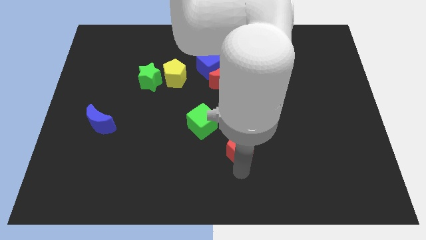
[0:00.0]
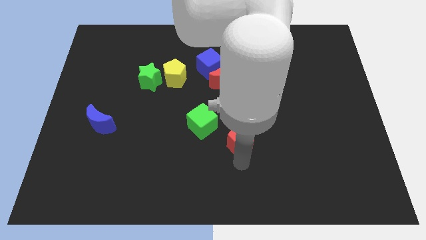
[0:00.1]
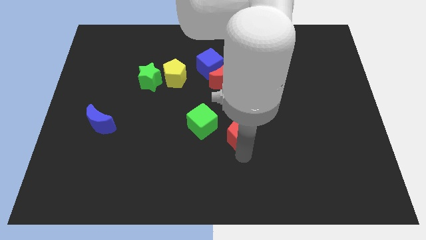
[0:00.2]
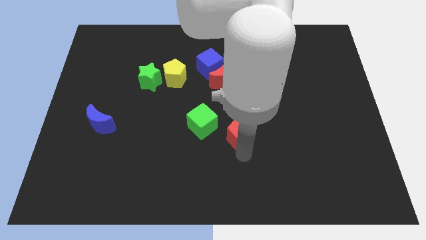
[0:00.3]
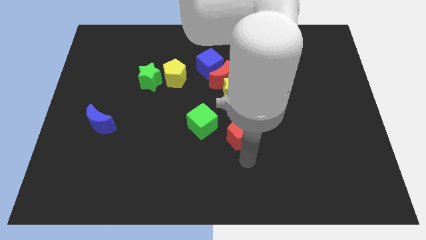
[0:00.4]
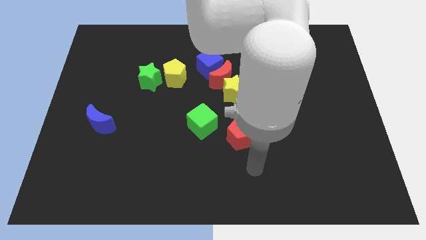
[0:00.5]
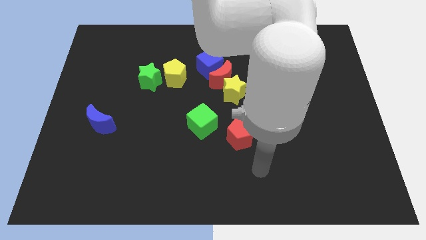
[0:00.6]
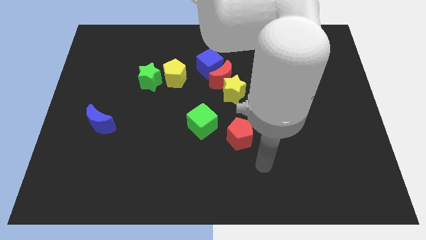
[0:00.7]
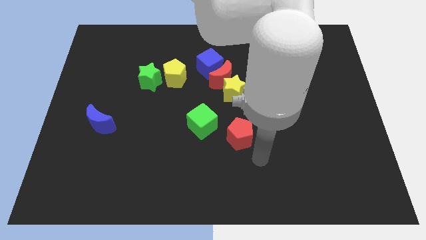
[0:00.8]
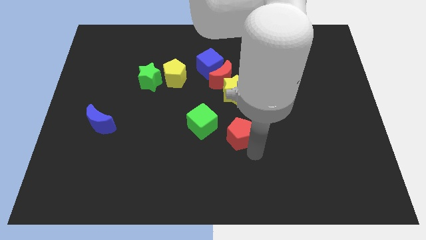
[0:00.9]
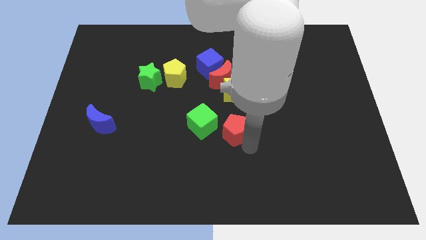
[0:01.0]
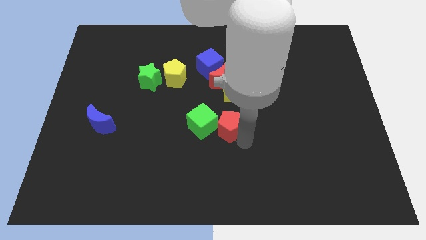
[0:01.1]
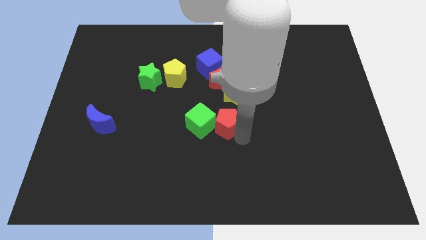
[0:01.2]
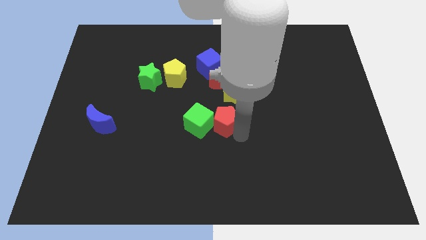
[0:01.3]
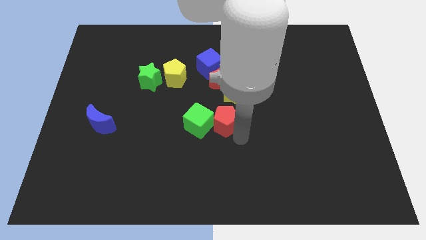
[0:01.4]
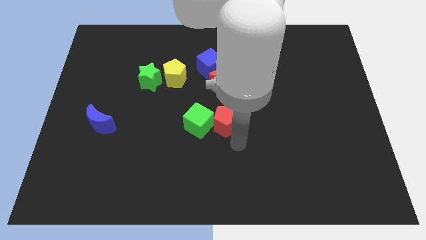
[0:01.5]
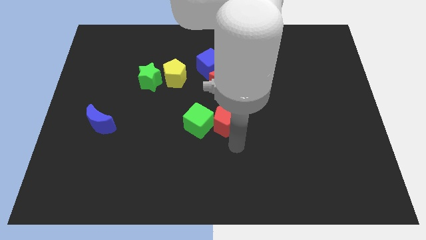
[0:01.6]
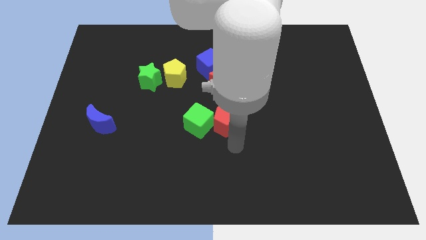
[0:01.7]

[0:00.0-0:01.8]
move the red pentagon right to the green cube

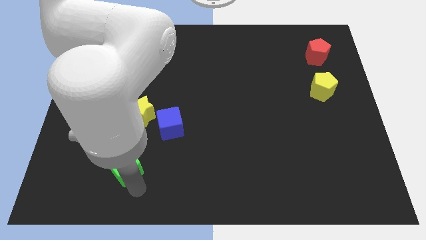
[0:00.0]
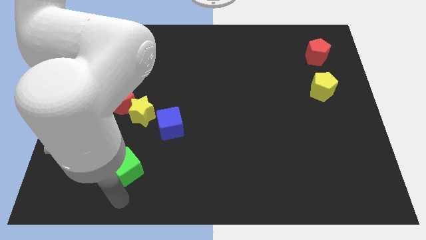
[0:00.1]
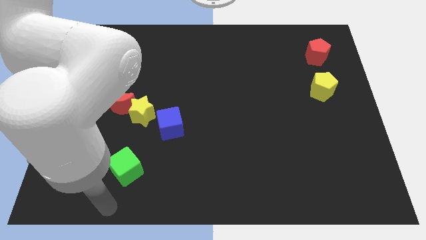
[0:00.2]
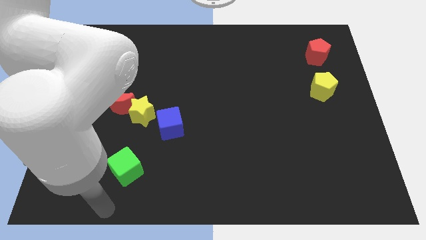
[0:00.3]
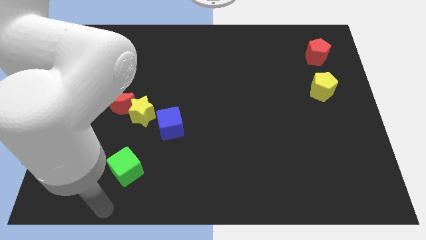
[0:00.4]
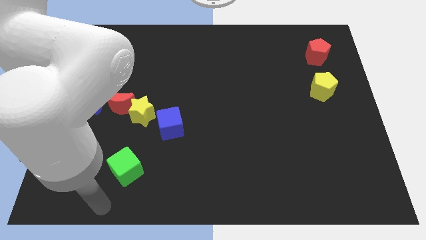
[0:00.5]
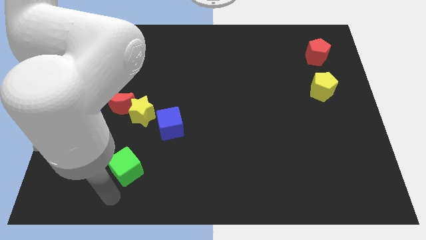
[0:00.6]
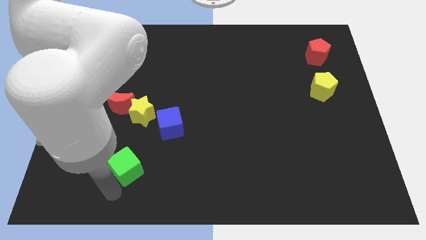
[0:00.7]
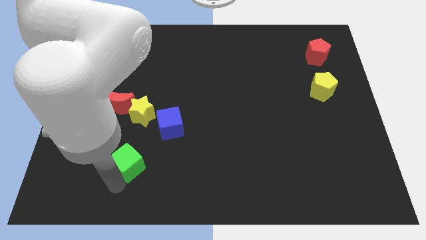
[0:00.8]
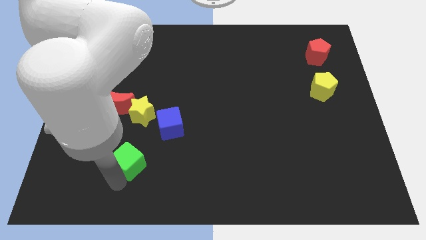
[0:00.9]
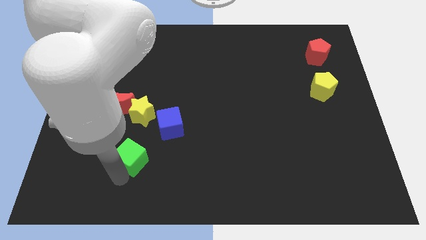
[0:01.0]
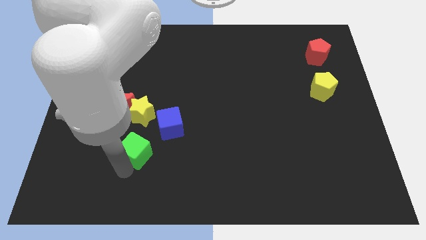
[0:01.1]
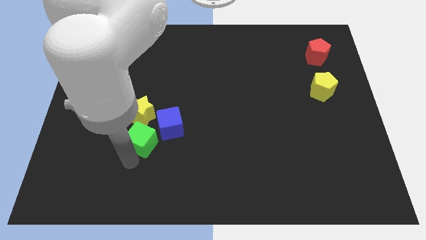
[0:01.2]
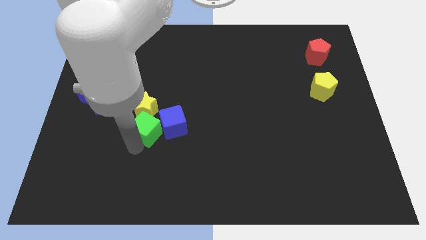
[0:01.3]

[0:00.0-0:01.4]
move the green cube into the yellow star

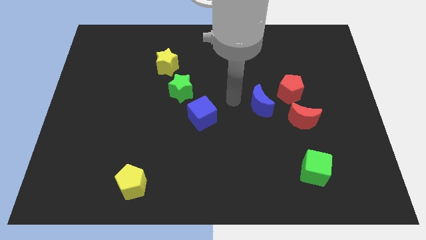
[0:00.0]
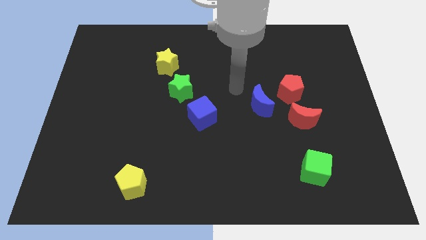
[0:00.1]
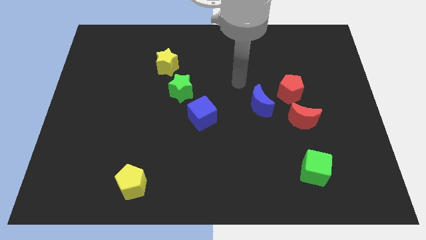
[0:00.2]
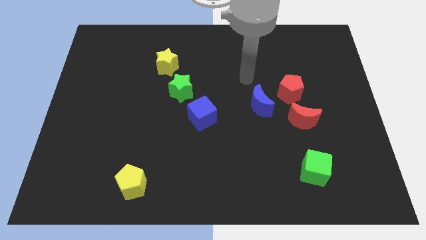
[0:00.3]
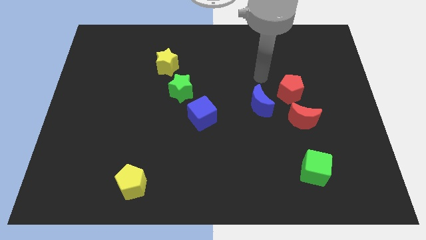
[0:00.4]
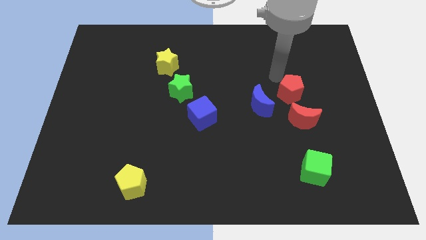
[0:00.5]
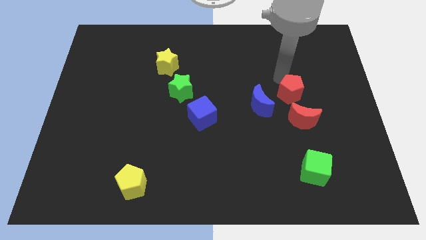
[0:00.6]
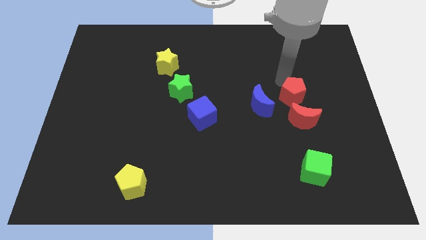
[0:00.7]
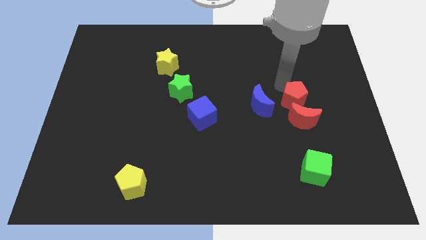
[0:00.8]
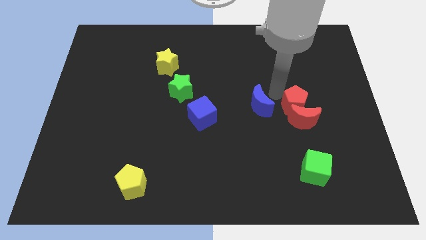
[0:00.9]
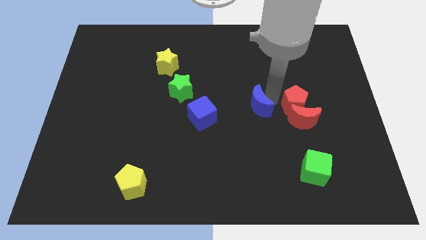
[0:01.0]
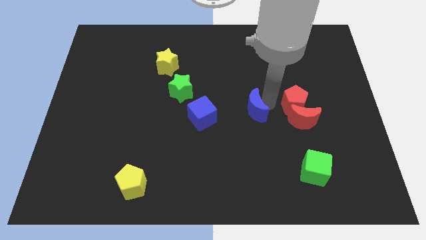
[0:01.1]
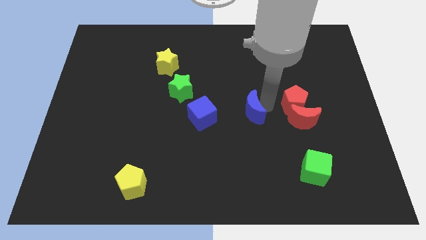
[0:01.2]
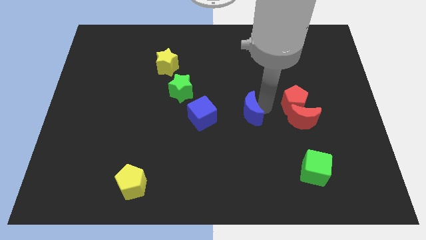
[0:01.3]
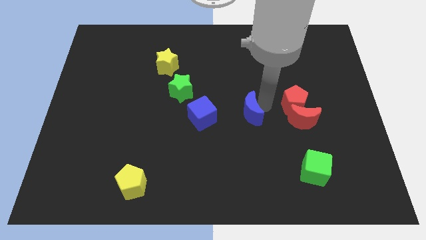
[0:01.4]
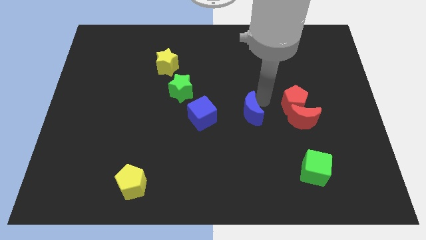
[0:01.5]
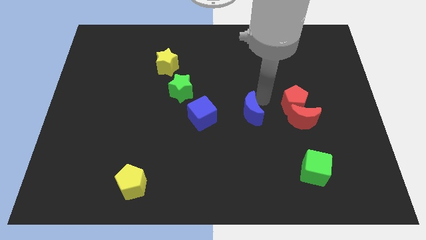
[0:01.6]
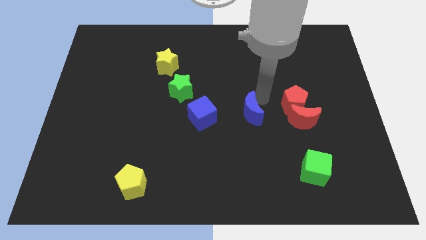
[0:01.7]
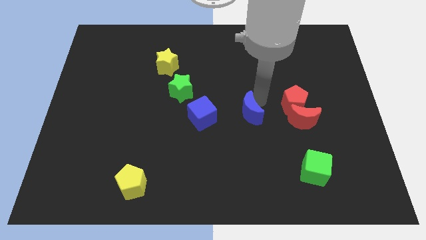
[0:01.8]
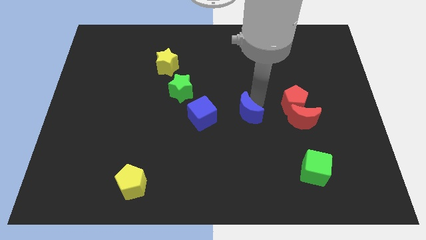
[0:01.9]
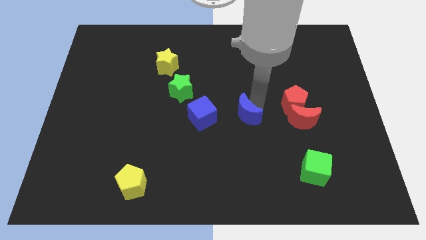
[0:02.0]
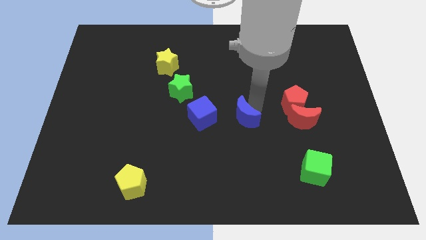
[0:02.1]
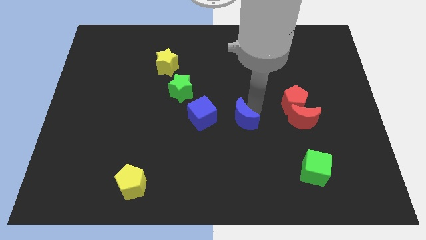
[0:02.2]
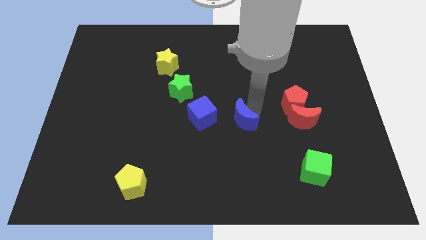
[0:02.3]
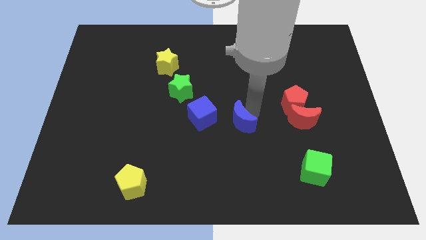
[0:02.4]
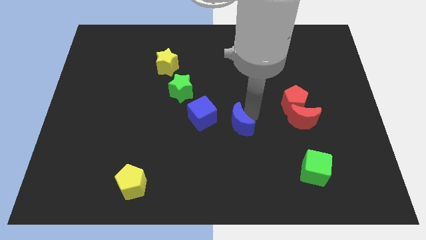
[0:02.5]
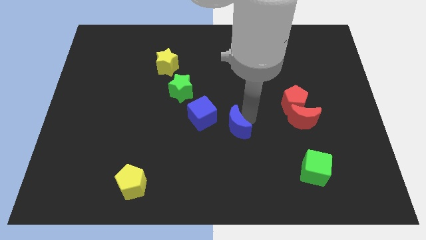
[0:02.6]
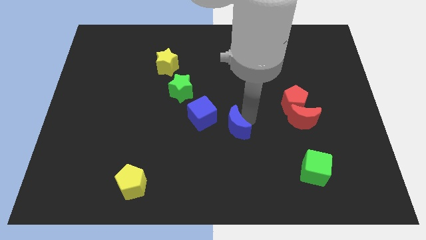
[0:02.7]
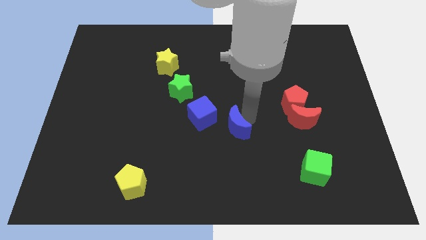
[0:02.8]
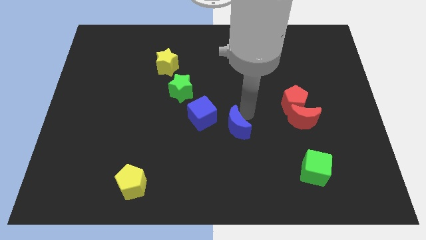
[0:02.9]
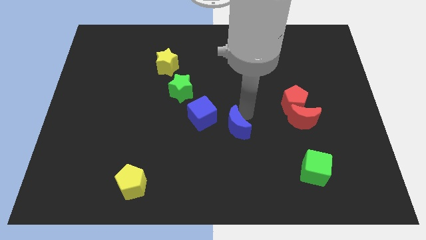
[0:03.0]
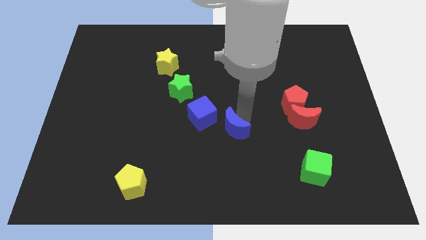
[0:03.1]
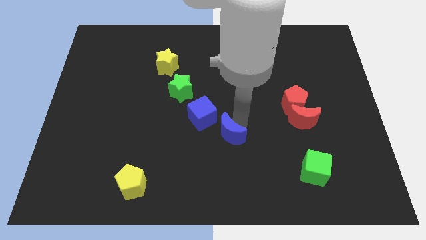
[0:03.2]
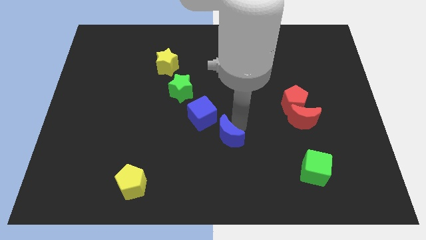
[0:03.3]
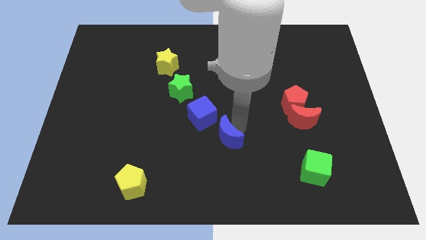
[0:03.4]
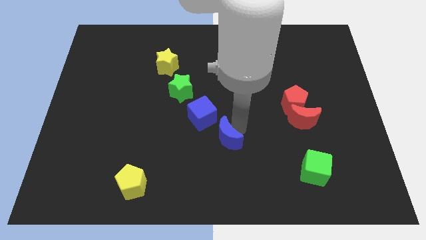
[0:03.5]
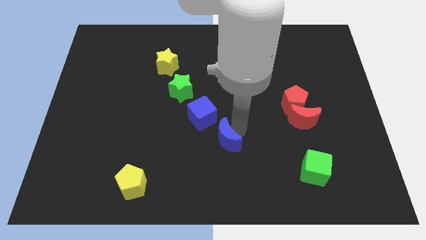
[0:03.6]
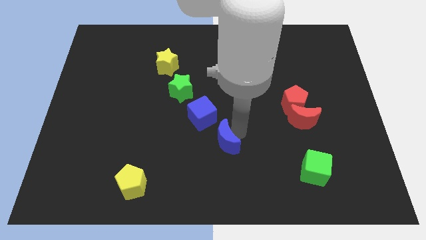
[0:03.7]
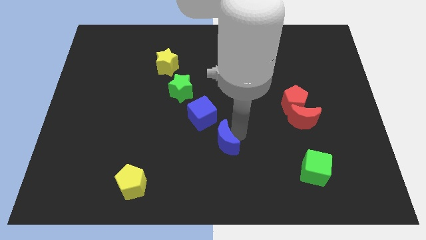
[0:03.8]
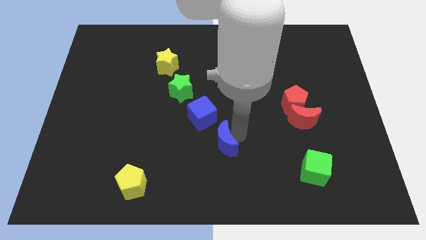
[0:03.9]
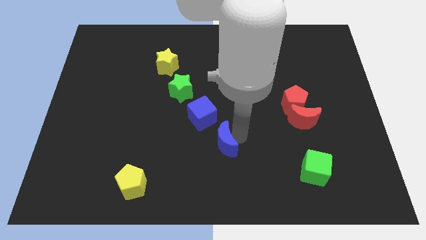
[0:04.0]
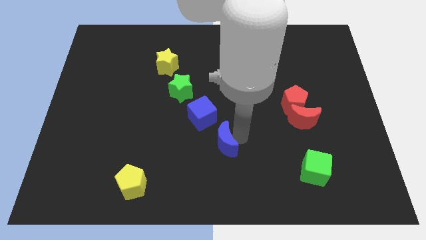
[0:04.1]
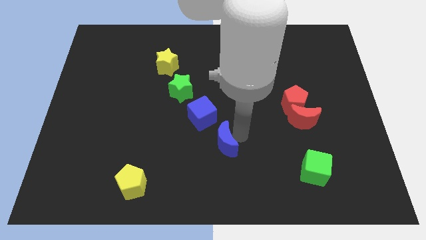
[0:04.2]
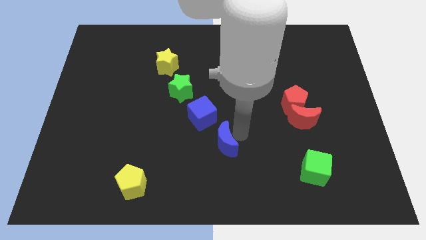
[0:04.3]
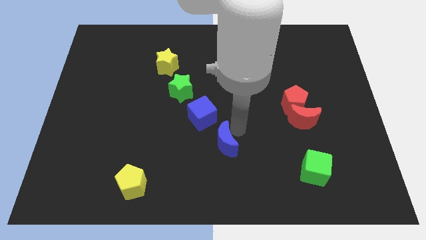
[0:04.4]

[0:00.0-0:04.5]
put the blue moon diagonally bottom right to the blue cube

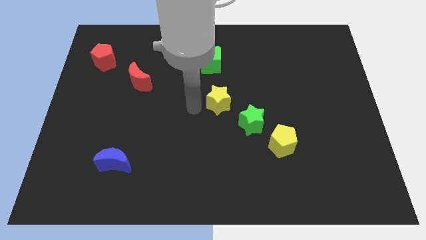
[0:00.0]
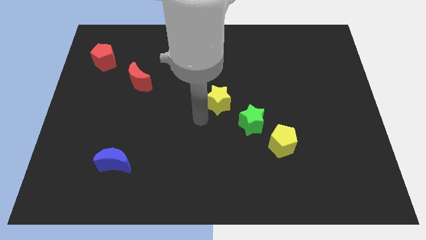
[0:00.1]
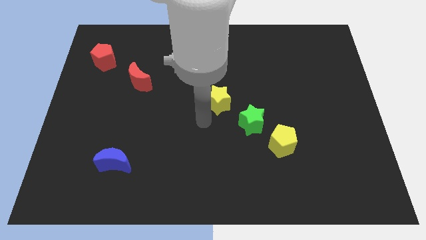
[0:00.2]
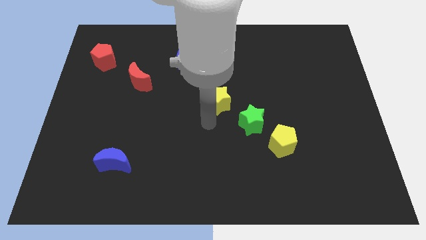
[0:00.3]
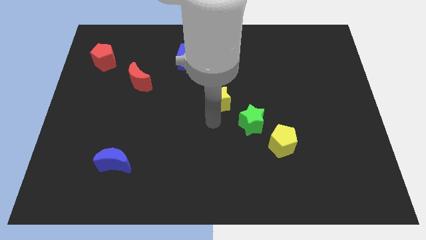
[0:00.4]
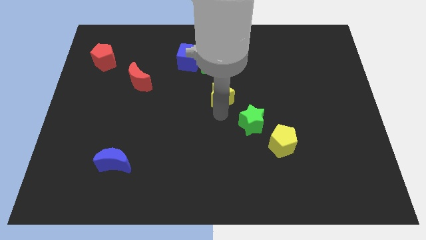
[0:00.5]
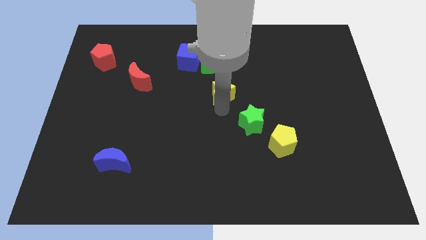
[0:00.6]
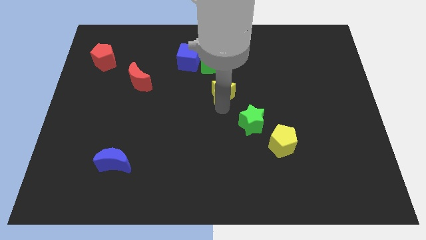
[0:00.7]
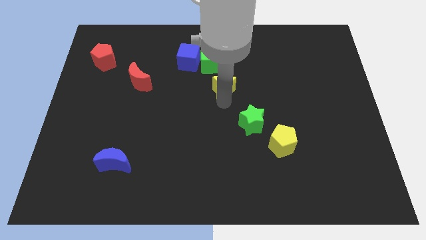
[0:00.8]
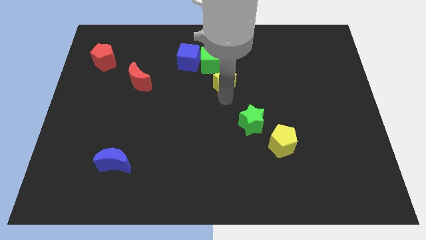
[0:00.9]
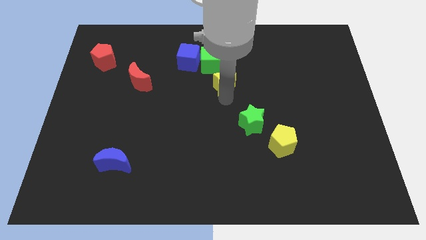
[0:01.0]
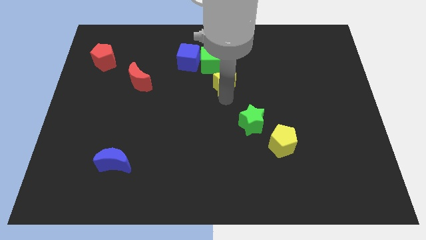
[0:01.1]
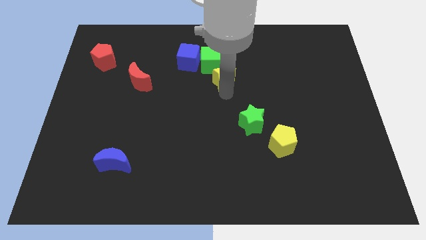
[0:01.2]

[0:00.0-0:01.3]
put the yellow star at the bottom right of green cube
